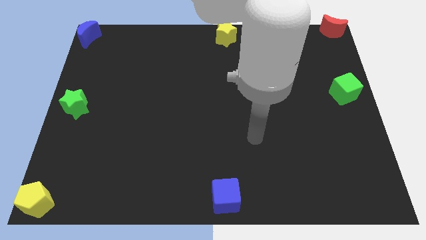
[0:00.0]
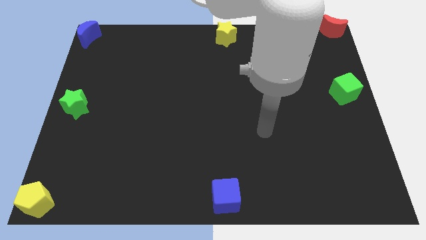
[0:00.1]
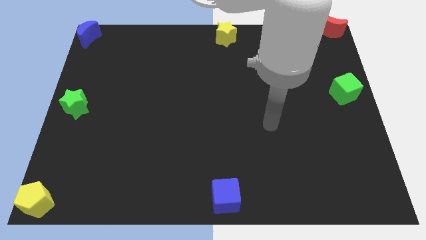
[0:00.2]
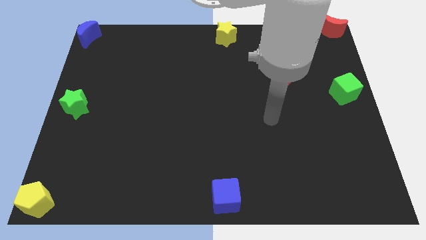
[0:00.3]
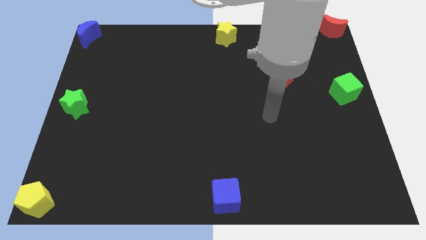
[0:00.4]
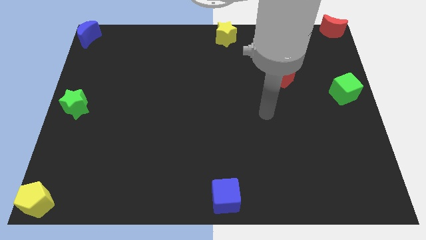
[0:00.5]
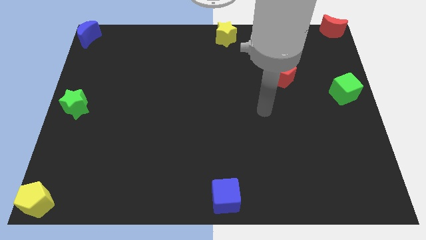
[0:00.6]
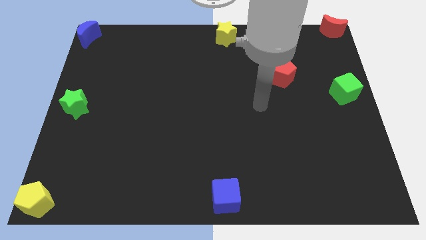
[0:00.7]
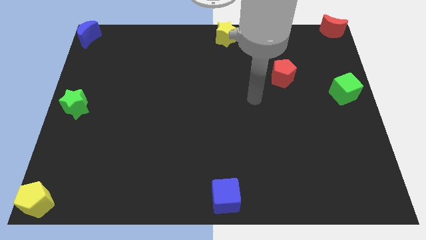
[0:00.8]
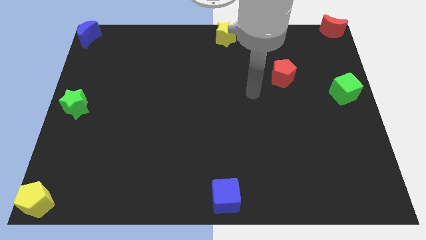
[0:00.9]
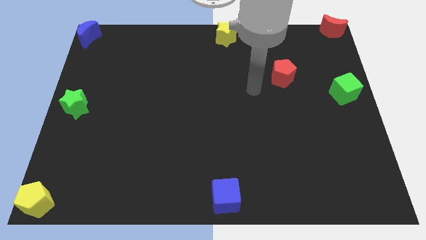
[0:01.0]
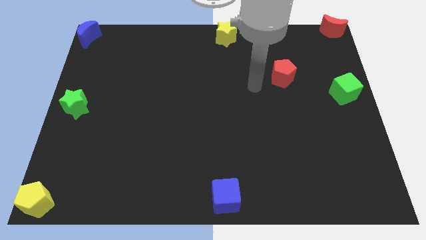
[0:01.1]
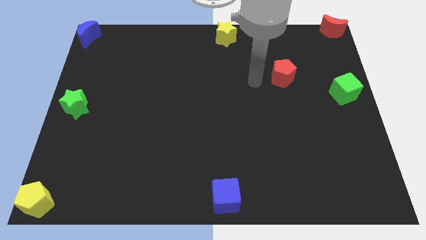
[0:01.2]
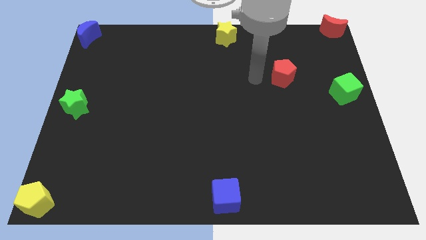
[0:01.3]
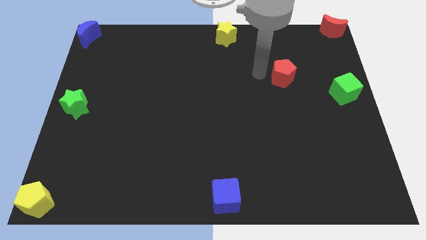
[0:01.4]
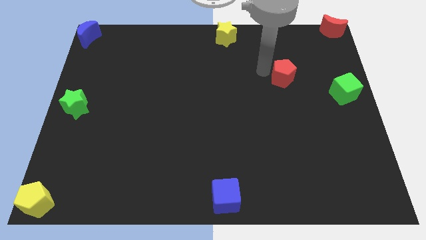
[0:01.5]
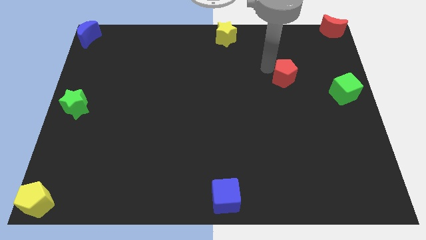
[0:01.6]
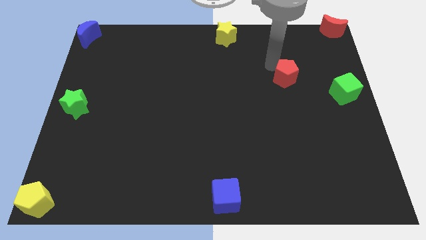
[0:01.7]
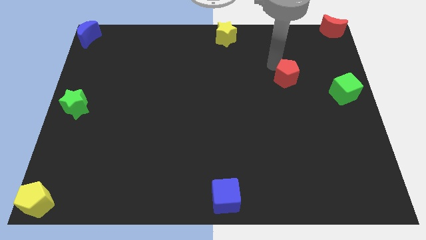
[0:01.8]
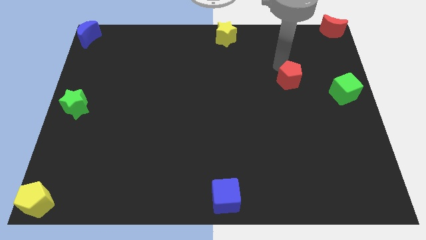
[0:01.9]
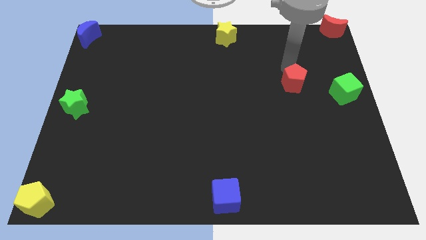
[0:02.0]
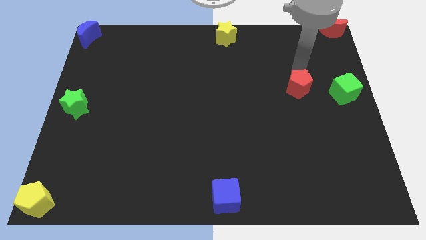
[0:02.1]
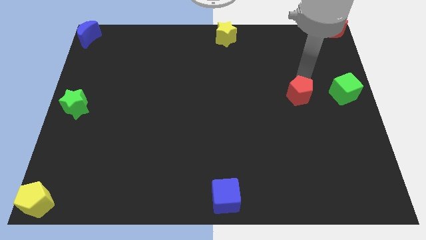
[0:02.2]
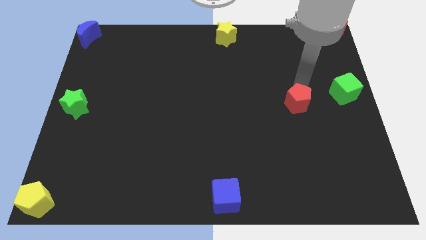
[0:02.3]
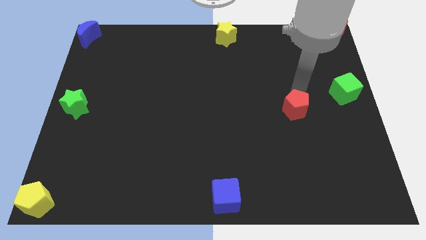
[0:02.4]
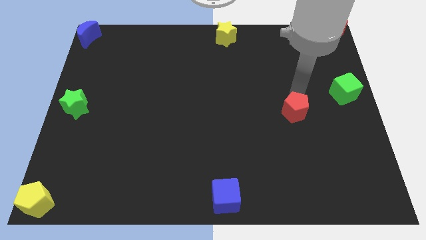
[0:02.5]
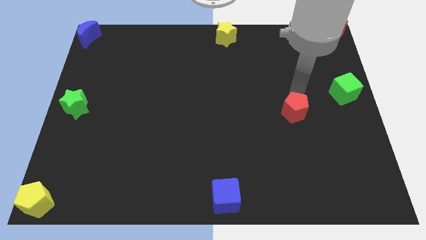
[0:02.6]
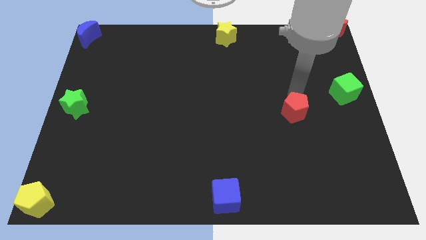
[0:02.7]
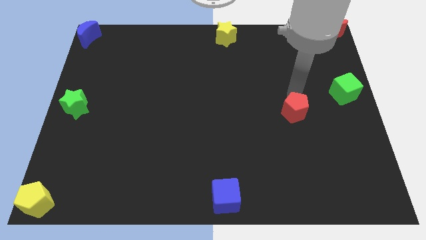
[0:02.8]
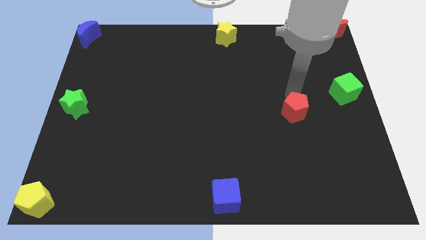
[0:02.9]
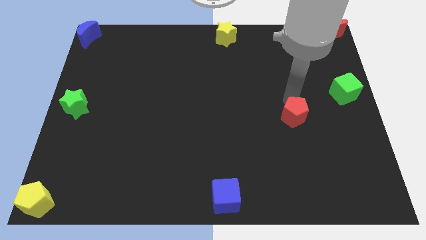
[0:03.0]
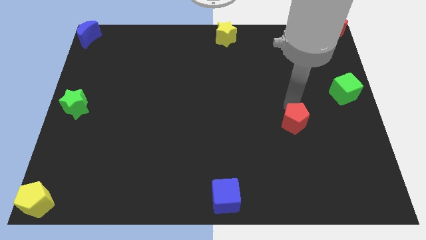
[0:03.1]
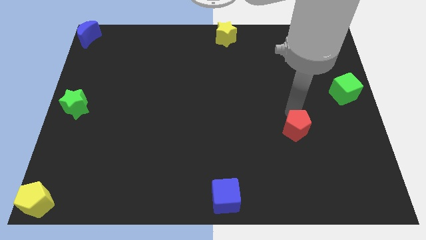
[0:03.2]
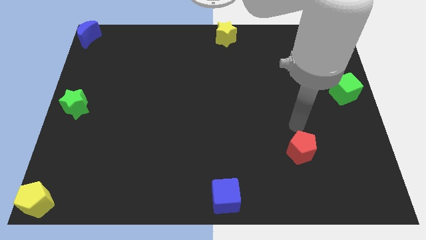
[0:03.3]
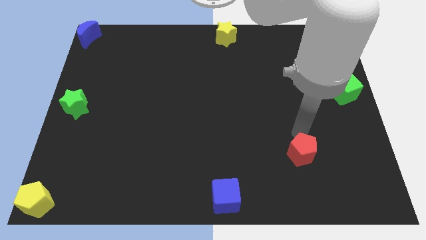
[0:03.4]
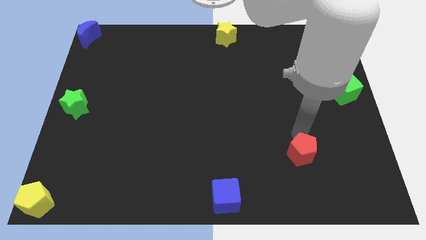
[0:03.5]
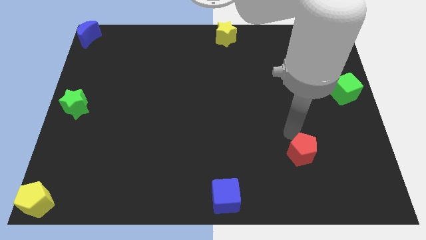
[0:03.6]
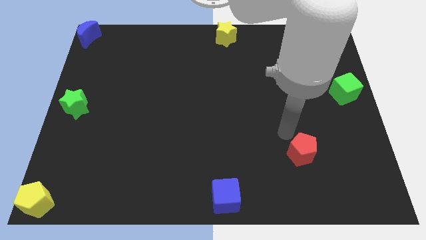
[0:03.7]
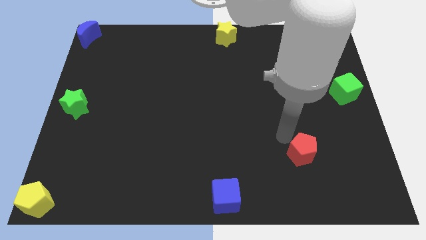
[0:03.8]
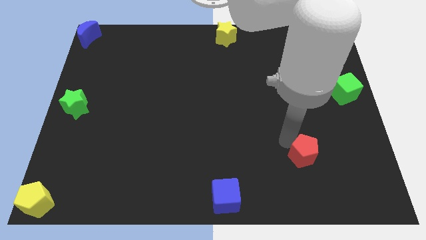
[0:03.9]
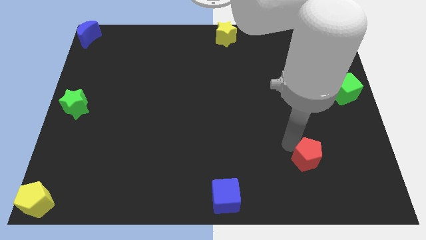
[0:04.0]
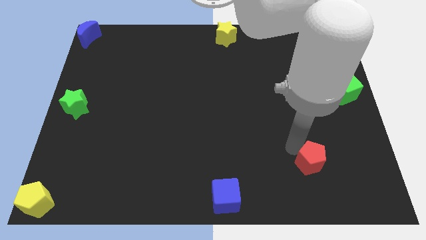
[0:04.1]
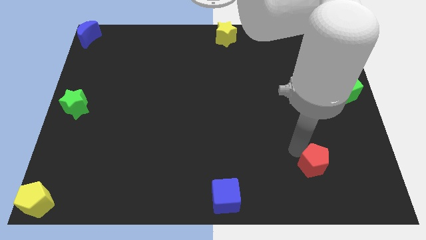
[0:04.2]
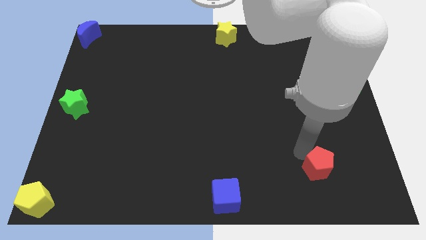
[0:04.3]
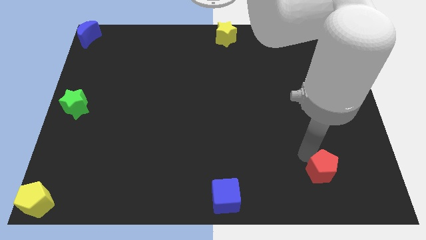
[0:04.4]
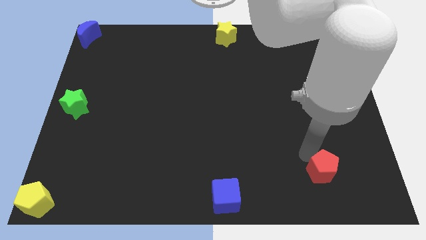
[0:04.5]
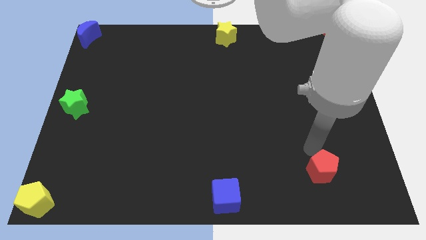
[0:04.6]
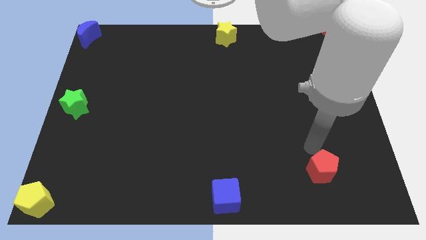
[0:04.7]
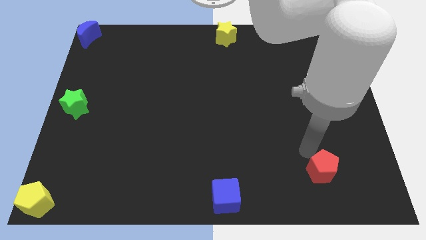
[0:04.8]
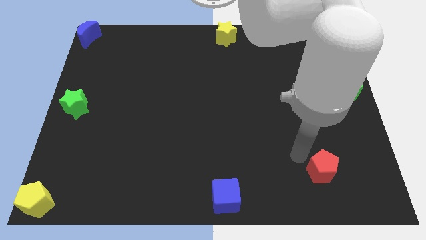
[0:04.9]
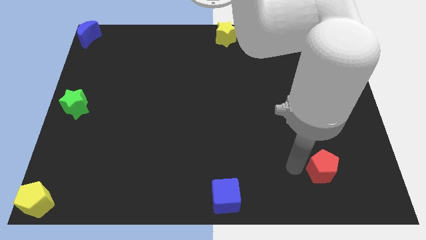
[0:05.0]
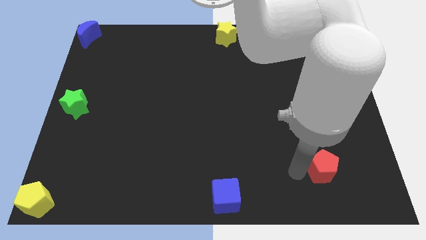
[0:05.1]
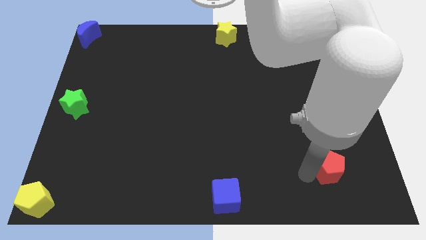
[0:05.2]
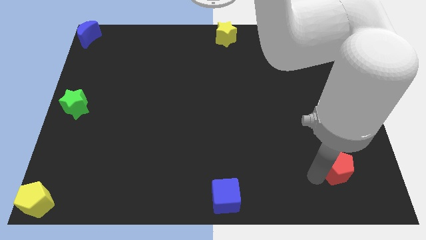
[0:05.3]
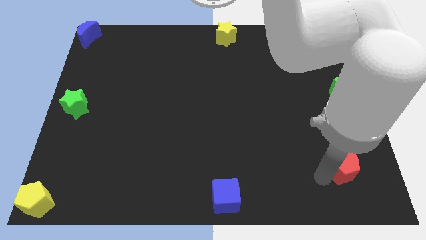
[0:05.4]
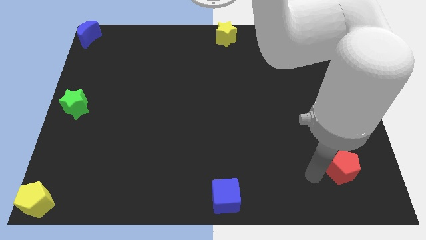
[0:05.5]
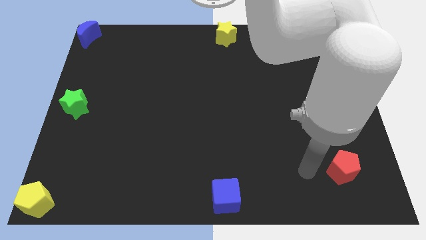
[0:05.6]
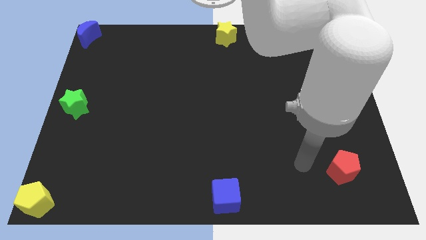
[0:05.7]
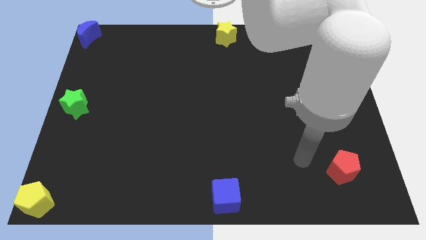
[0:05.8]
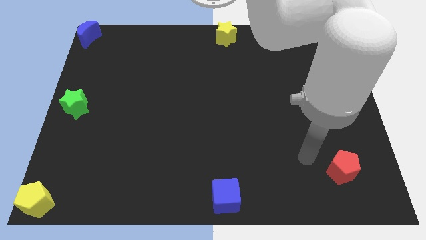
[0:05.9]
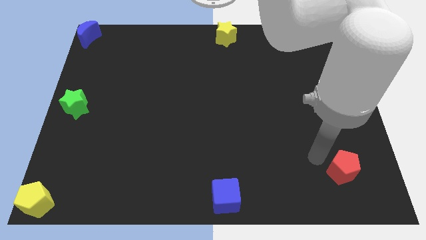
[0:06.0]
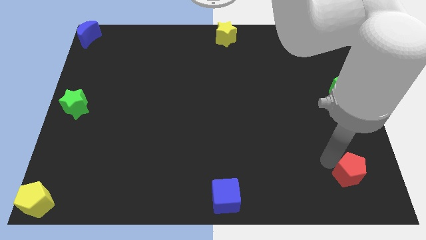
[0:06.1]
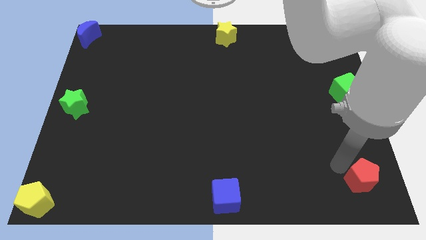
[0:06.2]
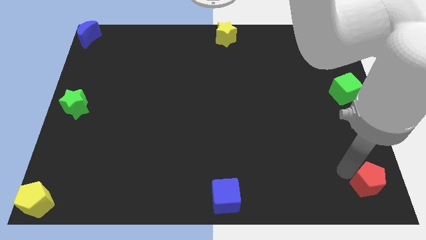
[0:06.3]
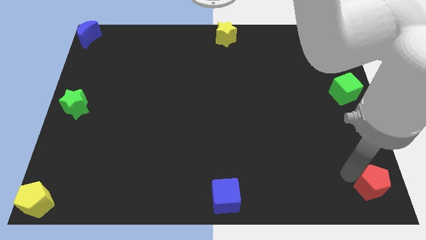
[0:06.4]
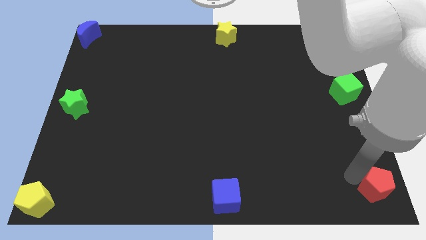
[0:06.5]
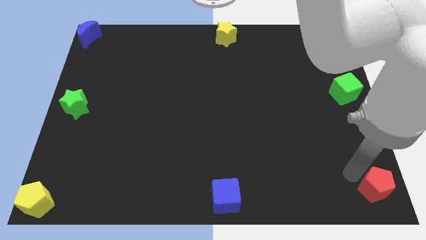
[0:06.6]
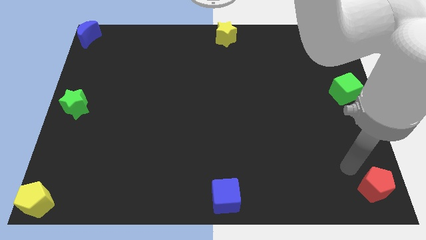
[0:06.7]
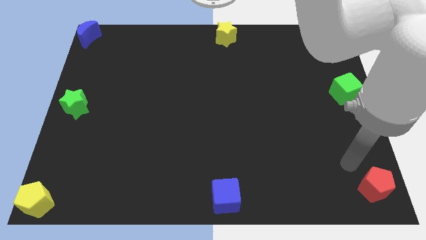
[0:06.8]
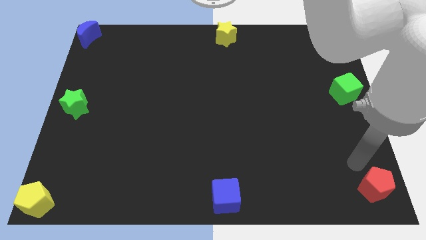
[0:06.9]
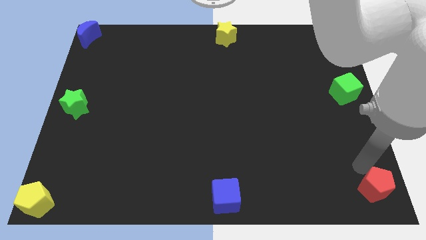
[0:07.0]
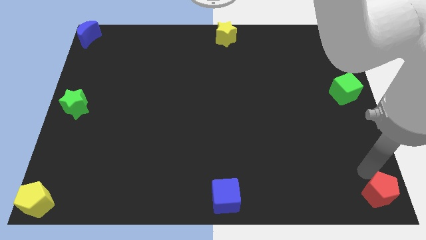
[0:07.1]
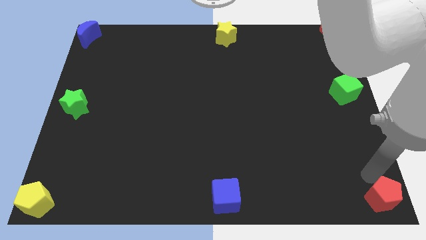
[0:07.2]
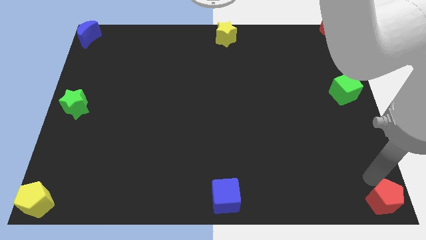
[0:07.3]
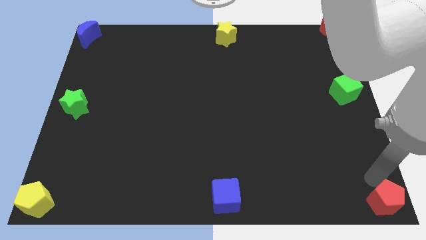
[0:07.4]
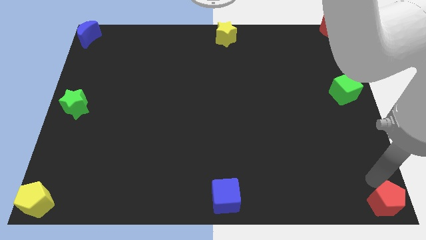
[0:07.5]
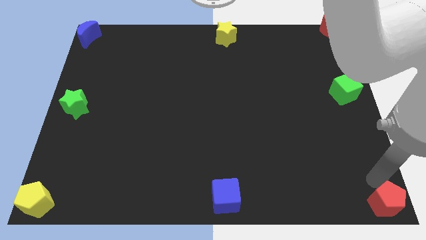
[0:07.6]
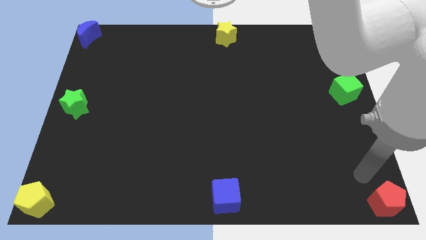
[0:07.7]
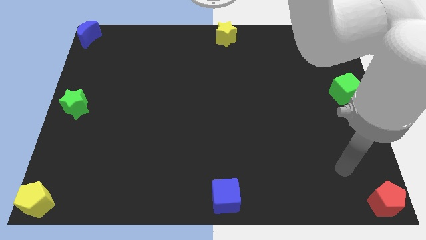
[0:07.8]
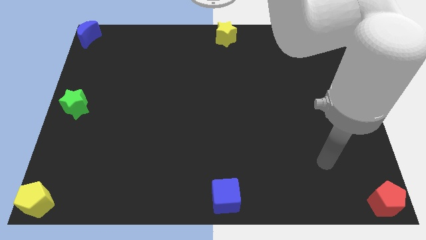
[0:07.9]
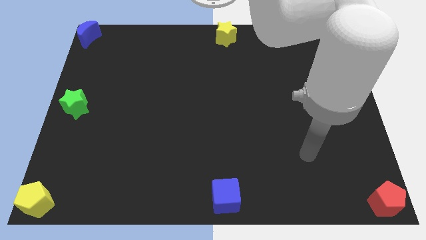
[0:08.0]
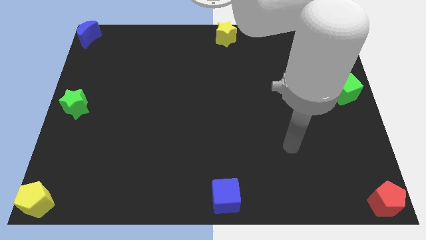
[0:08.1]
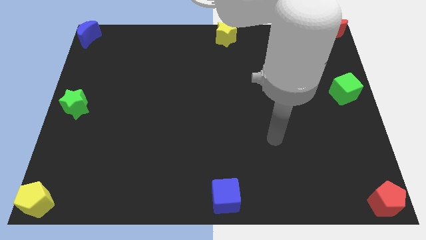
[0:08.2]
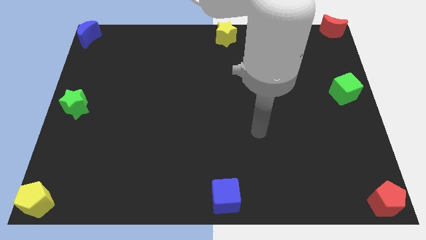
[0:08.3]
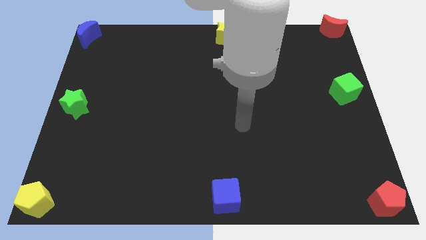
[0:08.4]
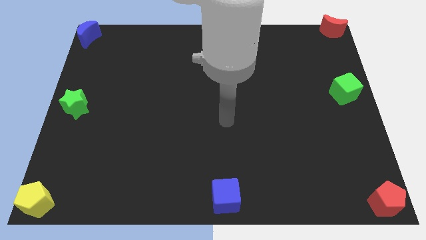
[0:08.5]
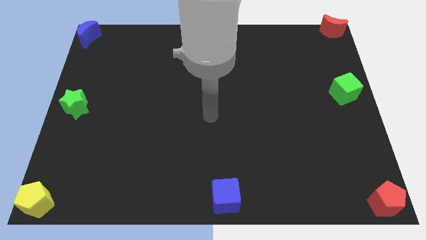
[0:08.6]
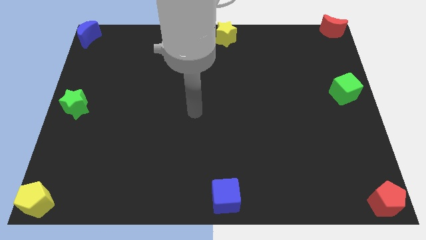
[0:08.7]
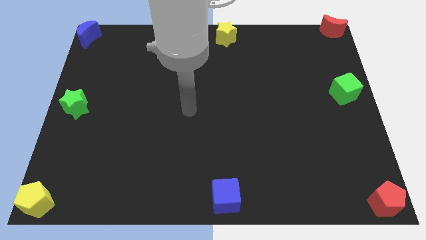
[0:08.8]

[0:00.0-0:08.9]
move the red pentagon to the bottom right corner of the board
